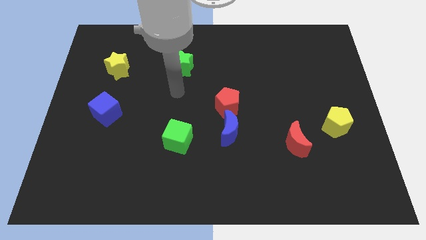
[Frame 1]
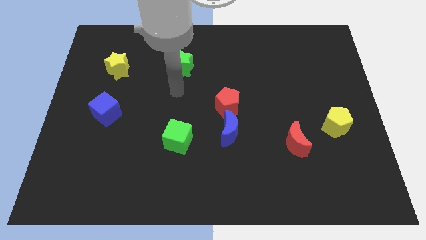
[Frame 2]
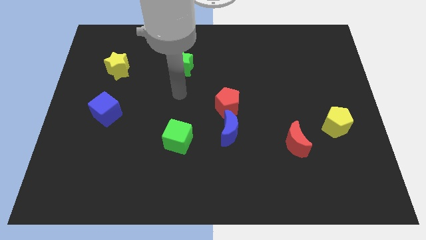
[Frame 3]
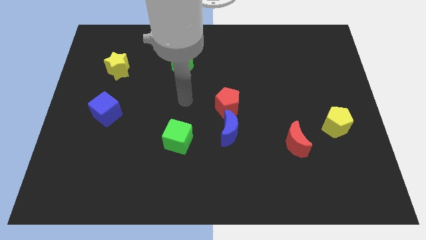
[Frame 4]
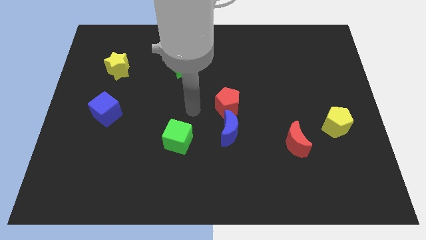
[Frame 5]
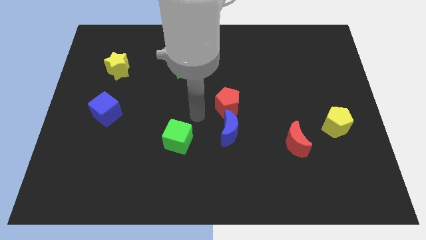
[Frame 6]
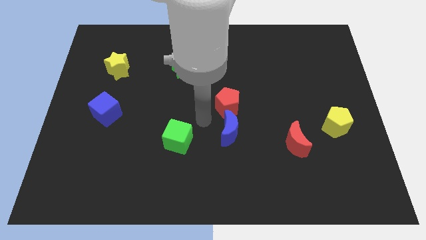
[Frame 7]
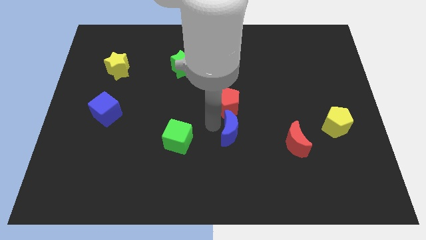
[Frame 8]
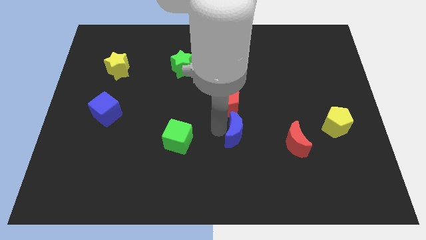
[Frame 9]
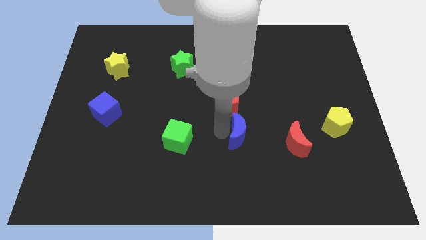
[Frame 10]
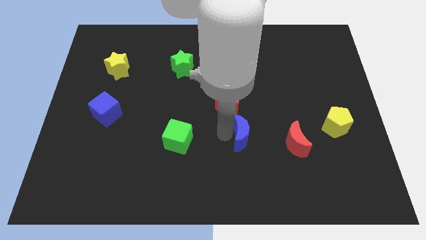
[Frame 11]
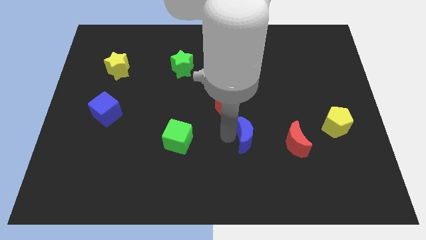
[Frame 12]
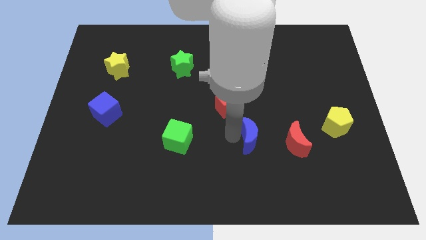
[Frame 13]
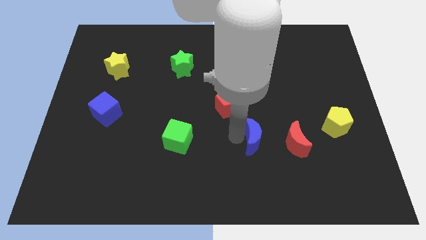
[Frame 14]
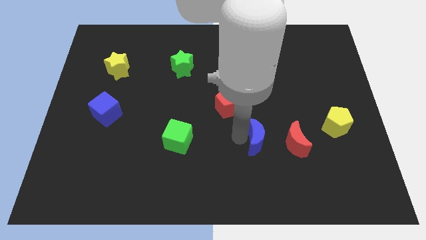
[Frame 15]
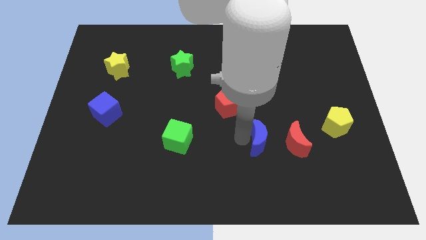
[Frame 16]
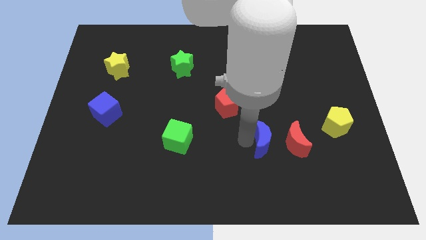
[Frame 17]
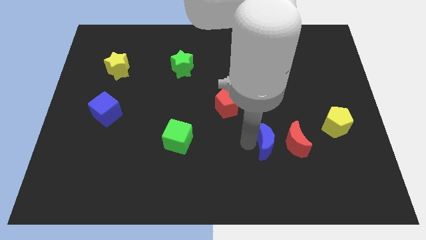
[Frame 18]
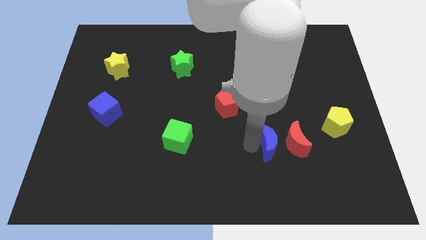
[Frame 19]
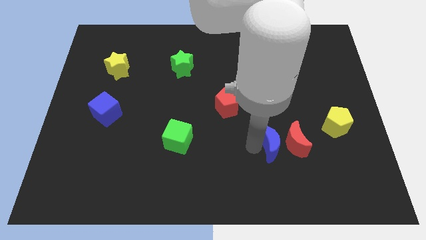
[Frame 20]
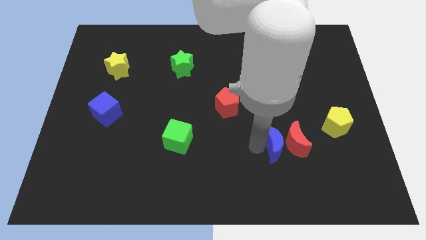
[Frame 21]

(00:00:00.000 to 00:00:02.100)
push the blue moon close to the red moon

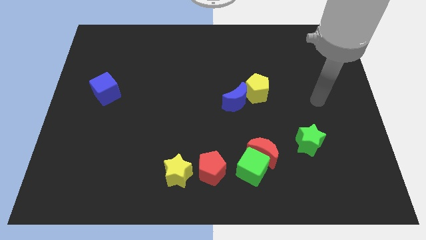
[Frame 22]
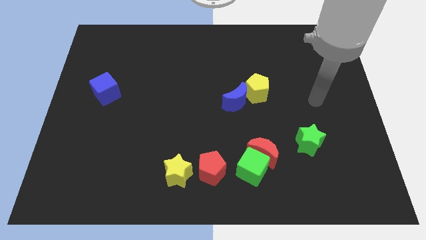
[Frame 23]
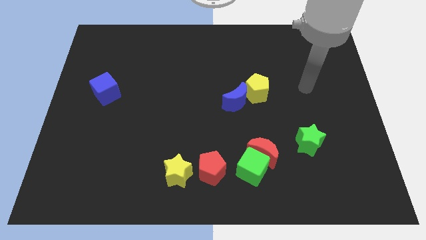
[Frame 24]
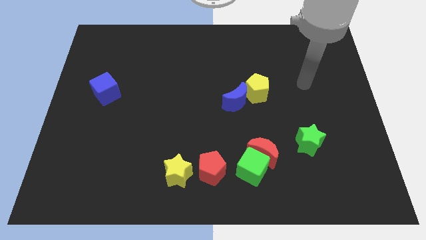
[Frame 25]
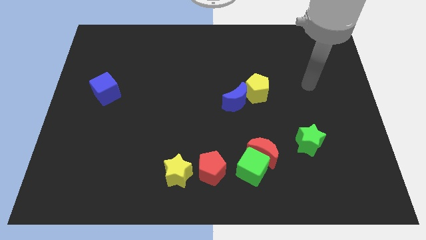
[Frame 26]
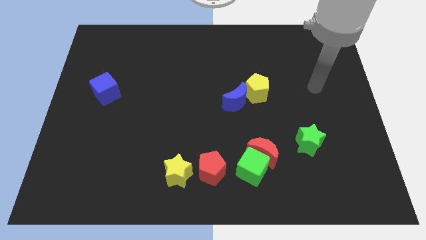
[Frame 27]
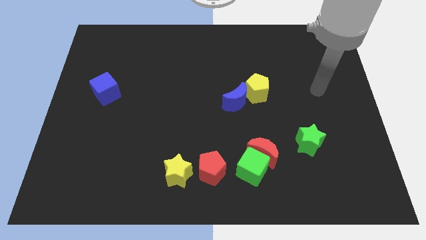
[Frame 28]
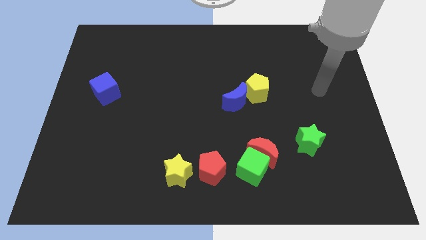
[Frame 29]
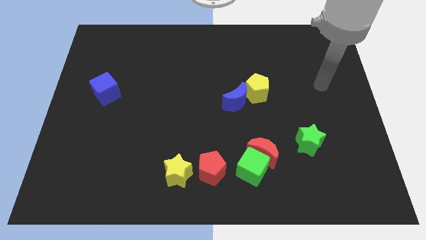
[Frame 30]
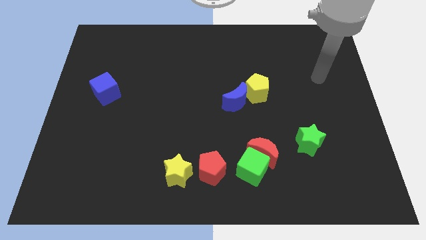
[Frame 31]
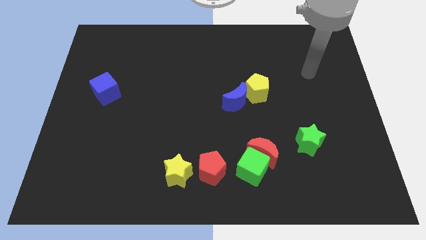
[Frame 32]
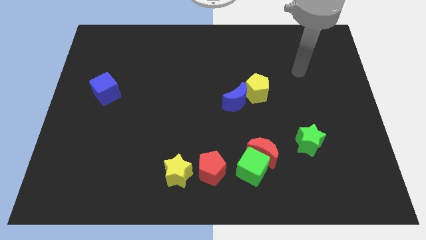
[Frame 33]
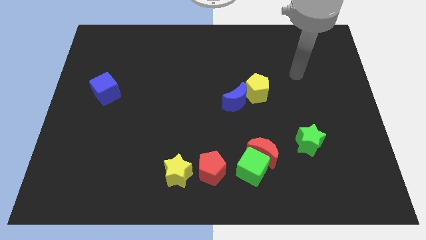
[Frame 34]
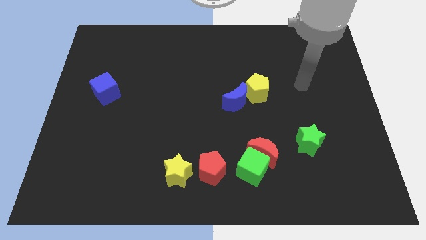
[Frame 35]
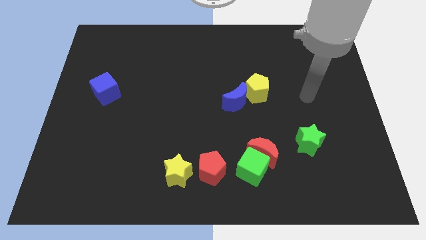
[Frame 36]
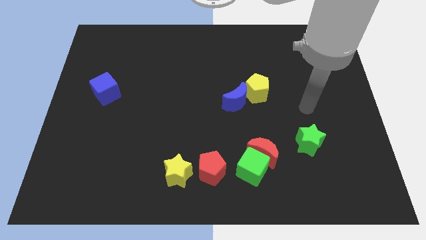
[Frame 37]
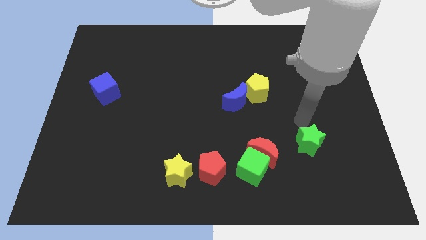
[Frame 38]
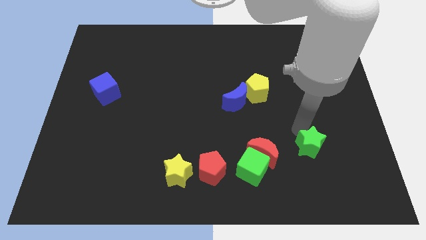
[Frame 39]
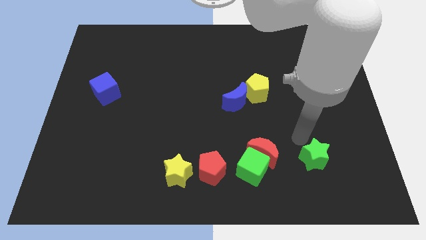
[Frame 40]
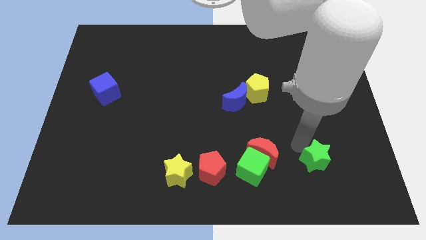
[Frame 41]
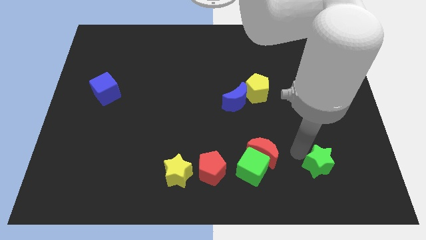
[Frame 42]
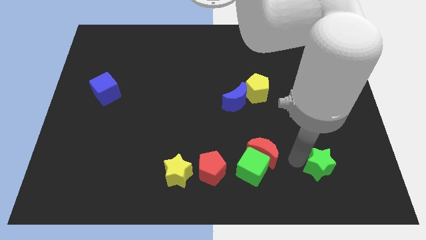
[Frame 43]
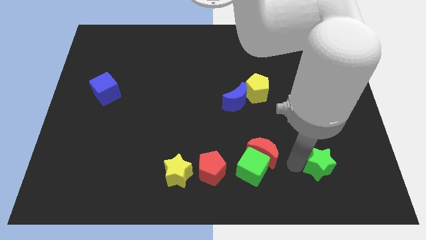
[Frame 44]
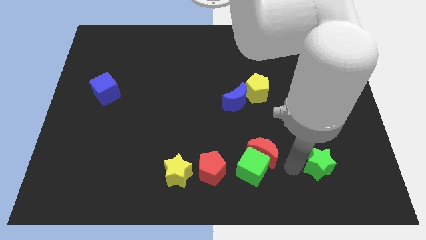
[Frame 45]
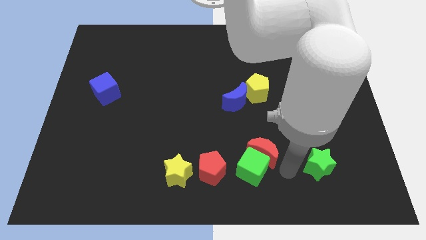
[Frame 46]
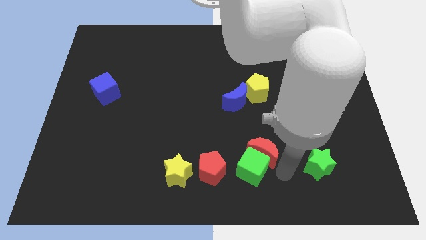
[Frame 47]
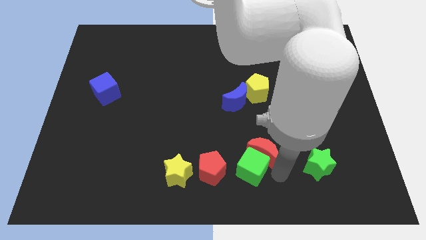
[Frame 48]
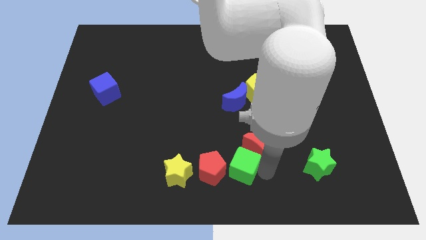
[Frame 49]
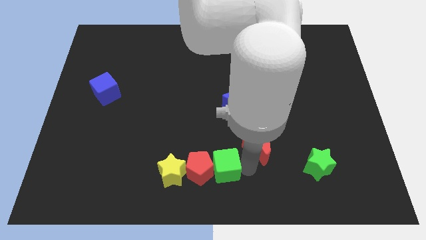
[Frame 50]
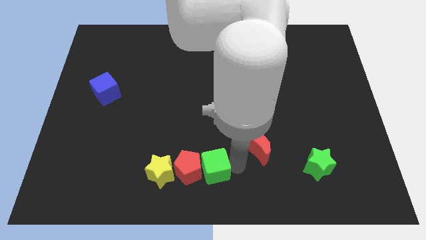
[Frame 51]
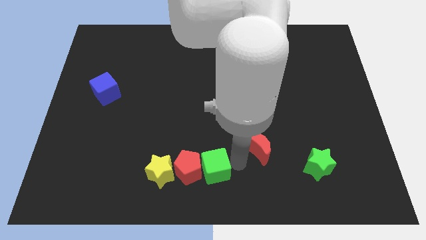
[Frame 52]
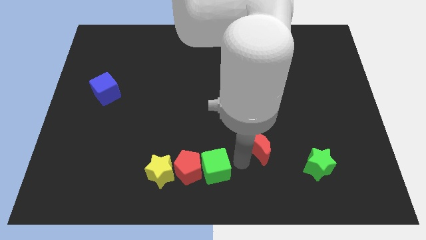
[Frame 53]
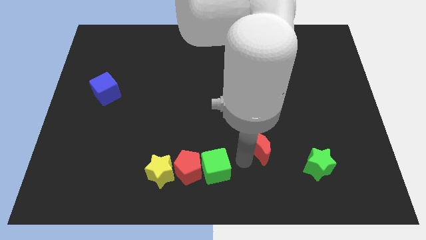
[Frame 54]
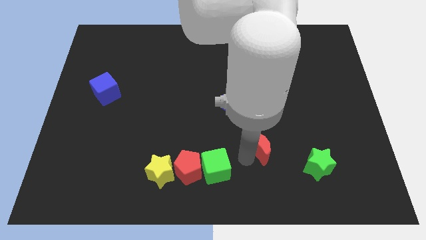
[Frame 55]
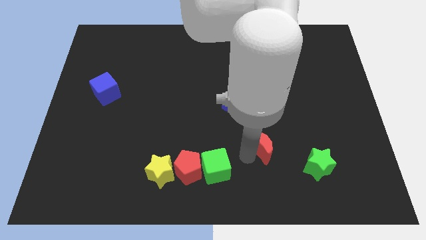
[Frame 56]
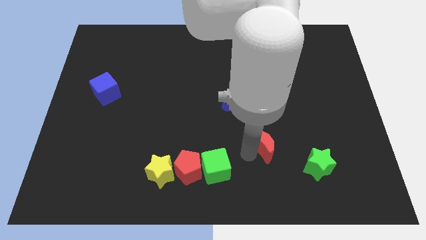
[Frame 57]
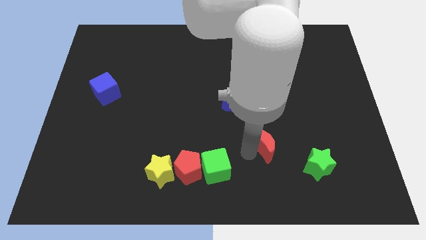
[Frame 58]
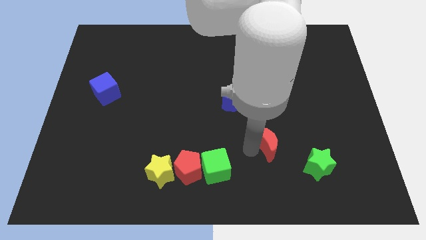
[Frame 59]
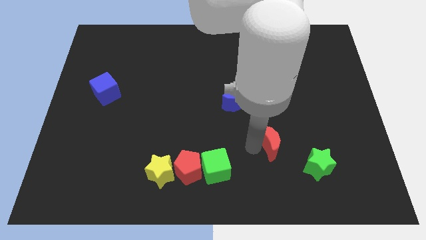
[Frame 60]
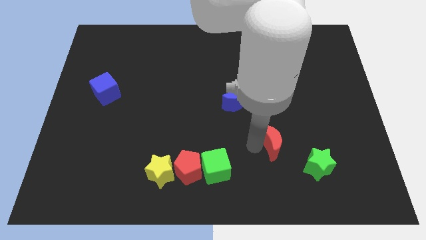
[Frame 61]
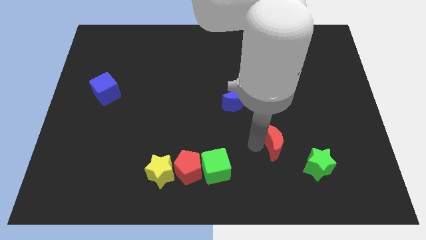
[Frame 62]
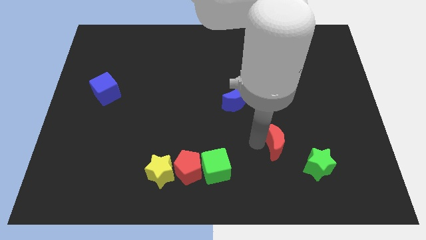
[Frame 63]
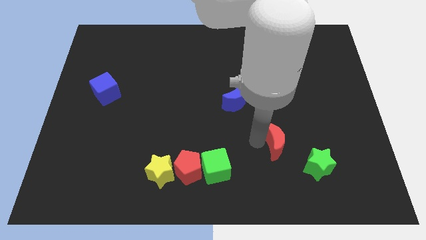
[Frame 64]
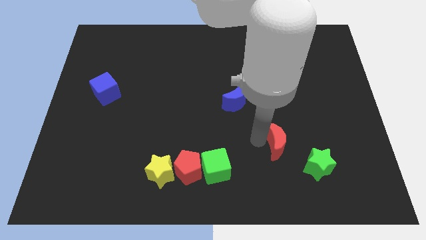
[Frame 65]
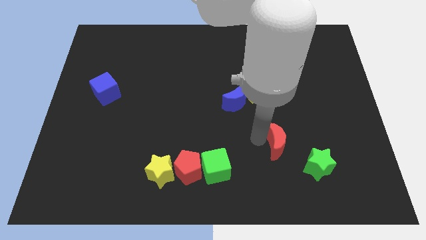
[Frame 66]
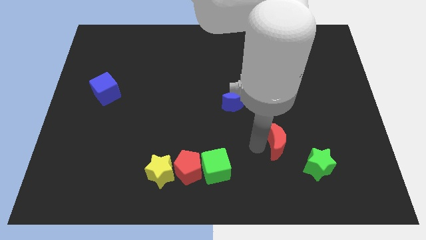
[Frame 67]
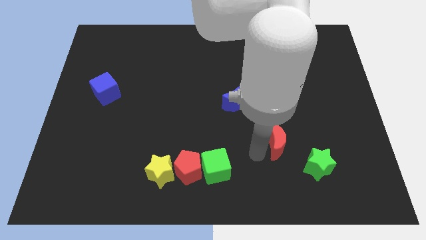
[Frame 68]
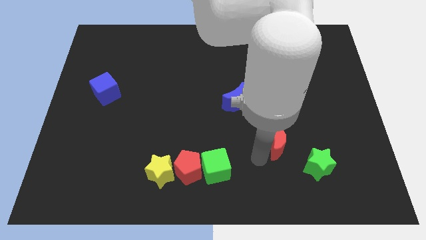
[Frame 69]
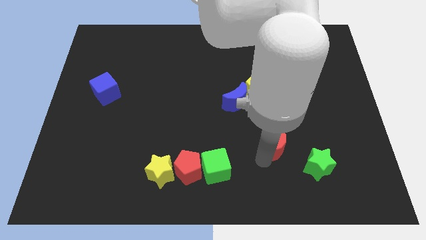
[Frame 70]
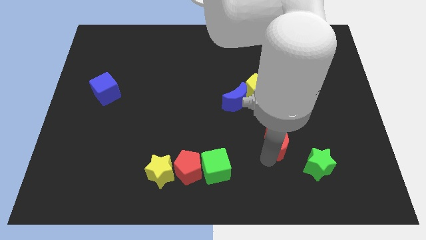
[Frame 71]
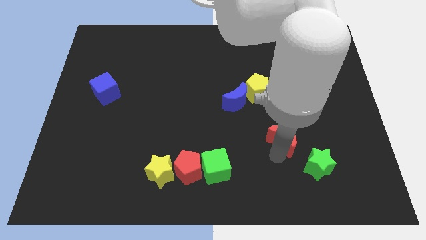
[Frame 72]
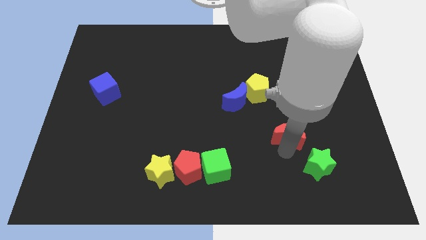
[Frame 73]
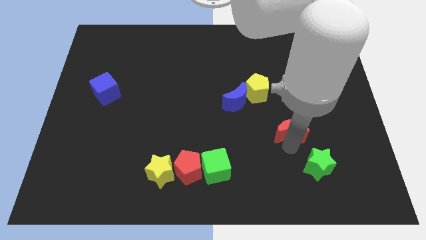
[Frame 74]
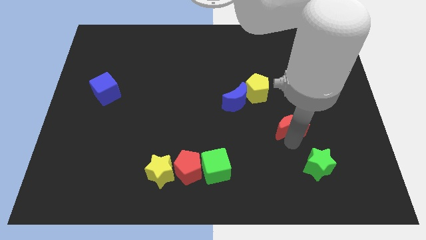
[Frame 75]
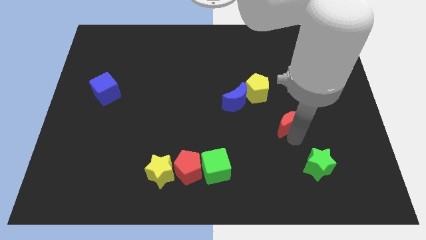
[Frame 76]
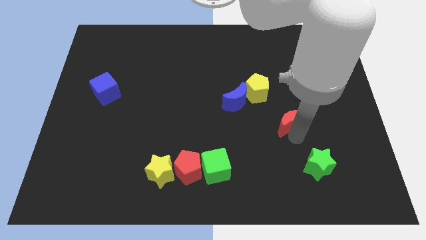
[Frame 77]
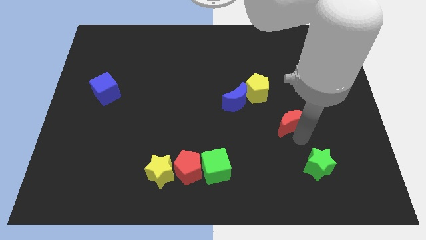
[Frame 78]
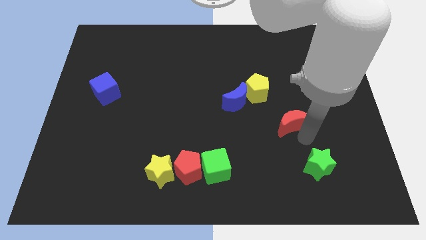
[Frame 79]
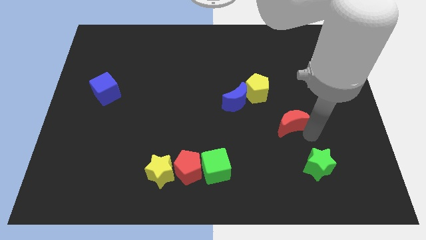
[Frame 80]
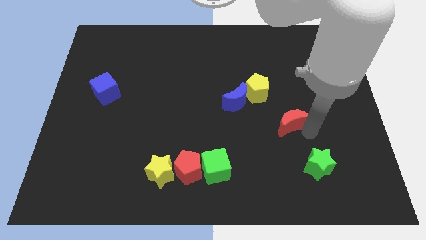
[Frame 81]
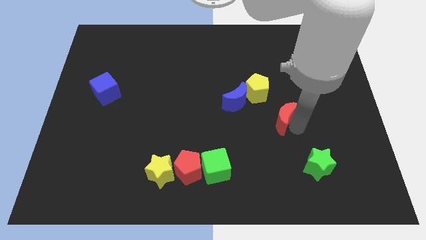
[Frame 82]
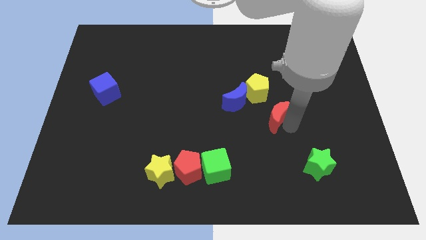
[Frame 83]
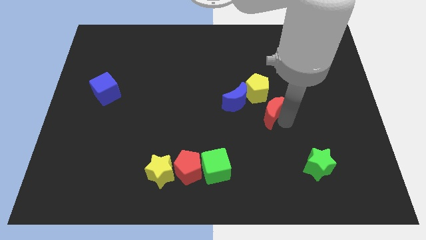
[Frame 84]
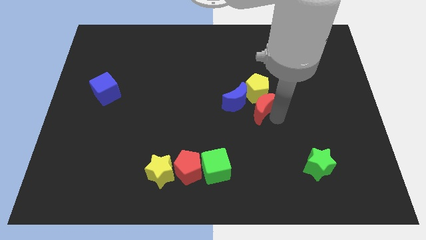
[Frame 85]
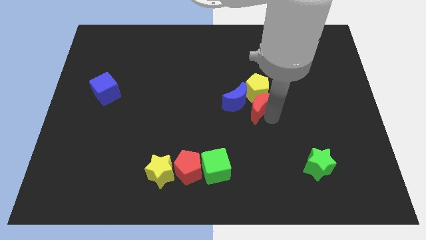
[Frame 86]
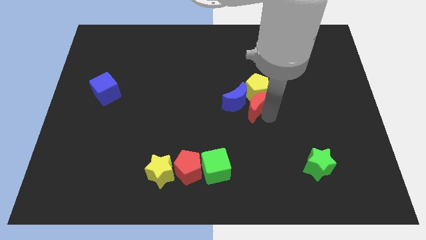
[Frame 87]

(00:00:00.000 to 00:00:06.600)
push the red moon towards the yellow pentagon
